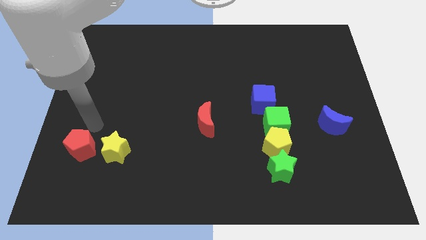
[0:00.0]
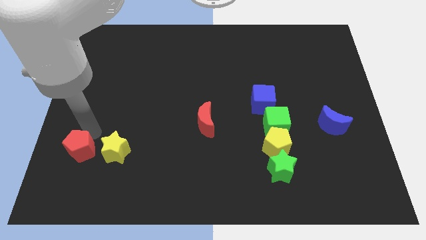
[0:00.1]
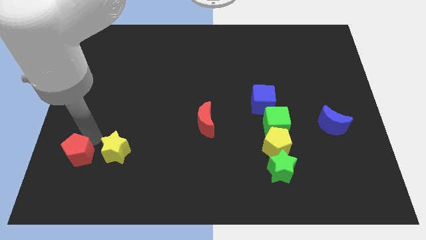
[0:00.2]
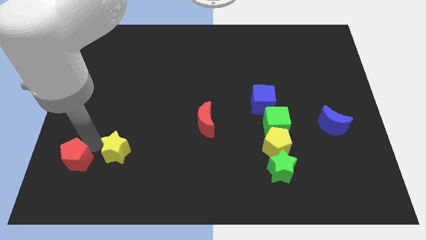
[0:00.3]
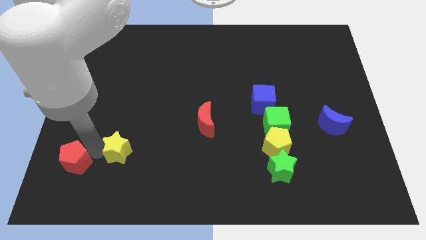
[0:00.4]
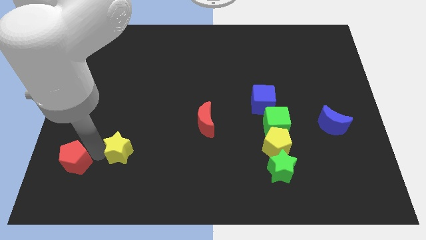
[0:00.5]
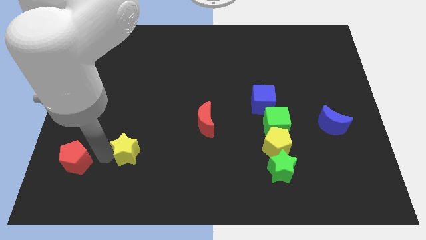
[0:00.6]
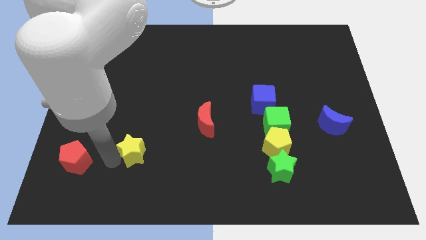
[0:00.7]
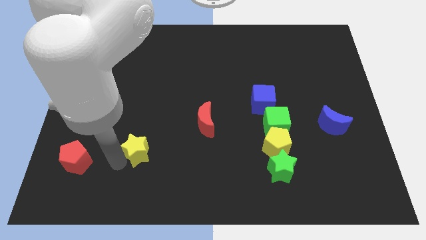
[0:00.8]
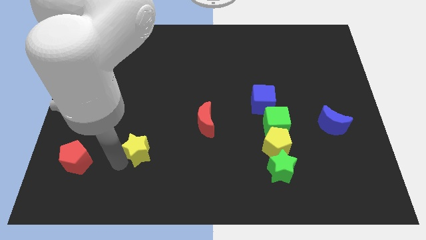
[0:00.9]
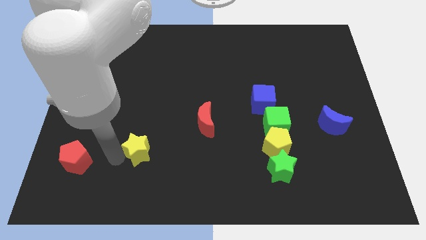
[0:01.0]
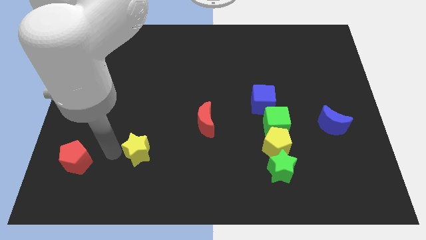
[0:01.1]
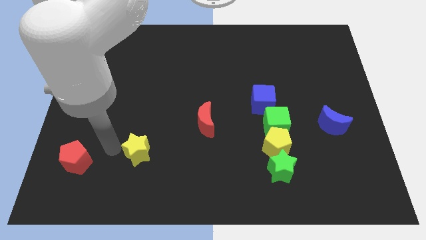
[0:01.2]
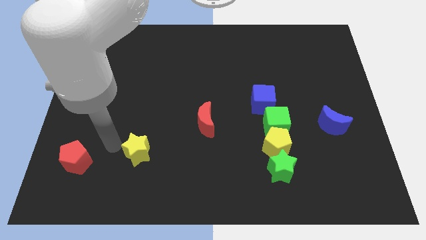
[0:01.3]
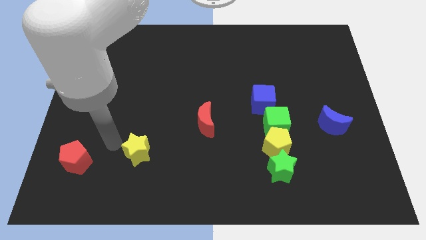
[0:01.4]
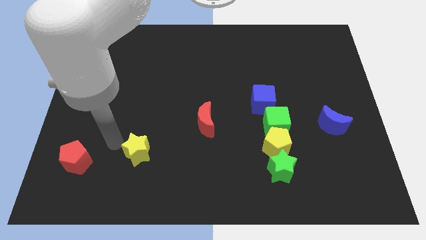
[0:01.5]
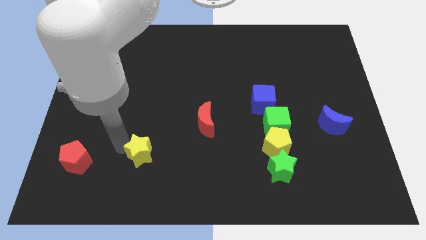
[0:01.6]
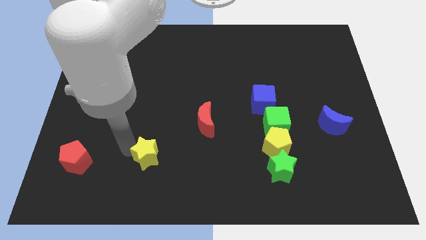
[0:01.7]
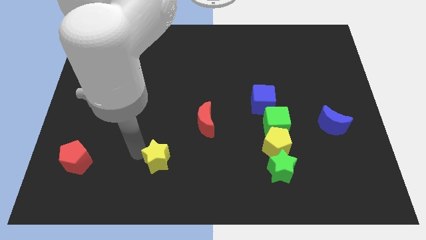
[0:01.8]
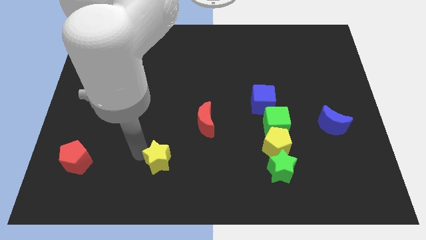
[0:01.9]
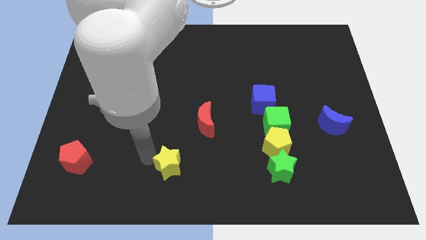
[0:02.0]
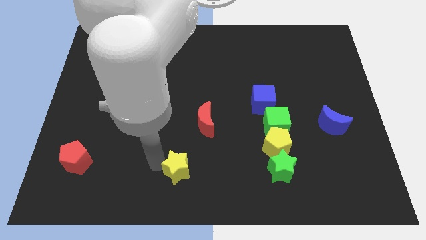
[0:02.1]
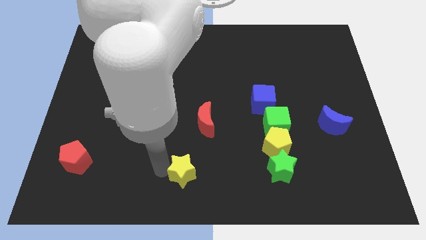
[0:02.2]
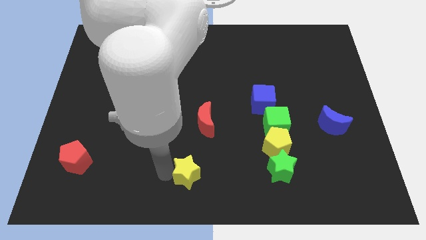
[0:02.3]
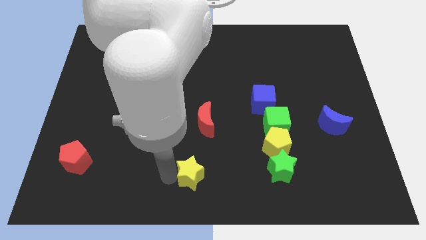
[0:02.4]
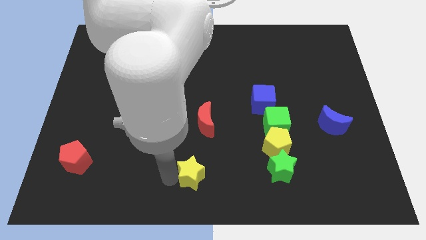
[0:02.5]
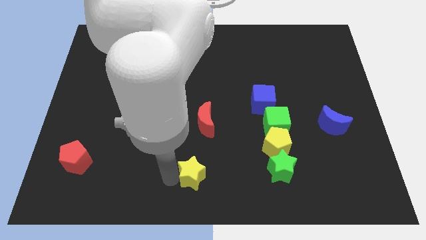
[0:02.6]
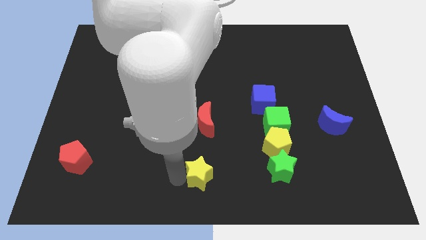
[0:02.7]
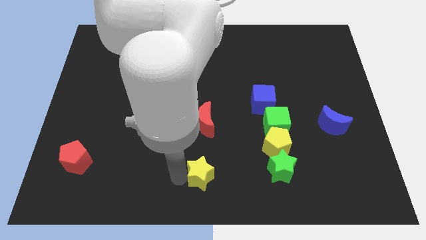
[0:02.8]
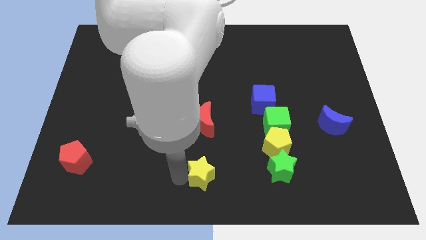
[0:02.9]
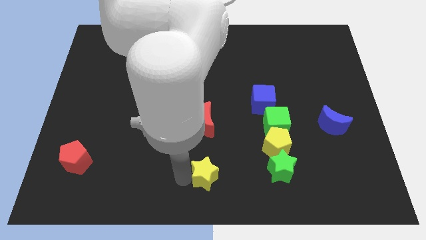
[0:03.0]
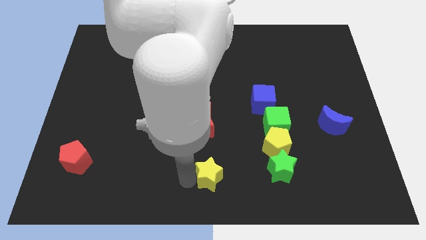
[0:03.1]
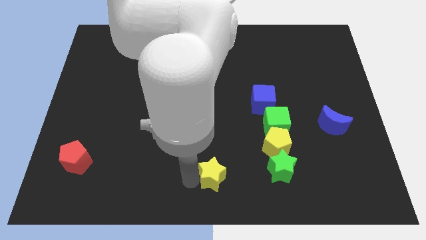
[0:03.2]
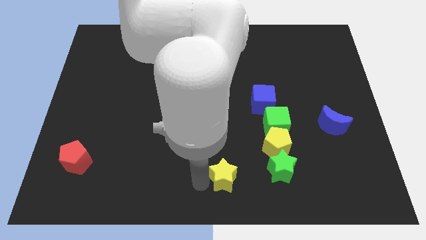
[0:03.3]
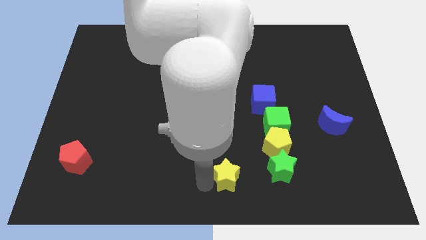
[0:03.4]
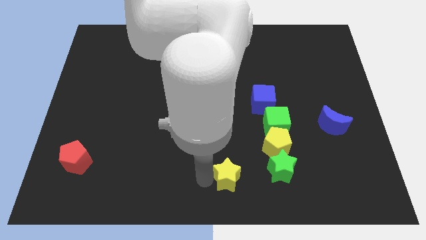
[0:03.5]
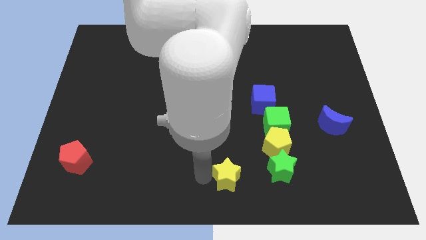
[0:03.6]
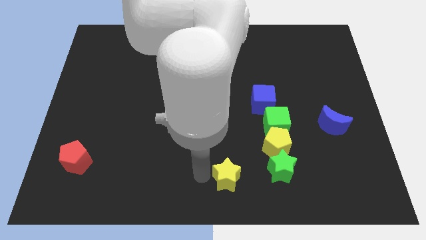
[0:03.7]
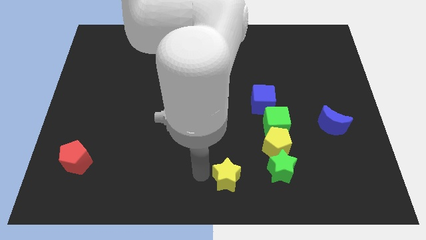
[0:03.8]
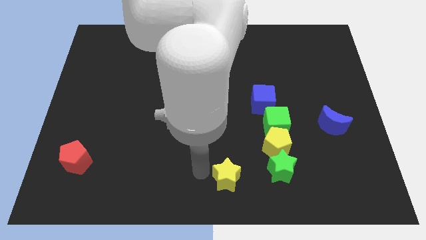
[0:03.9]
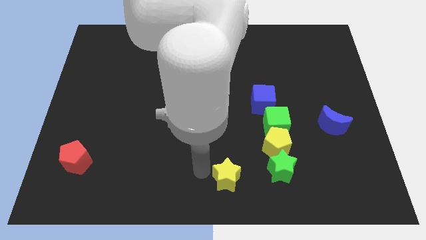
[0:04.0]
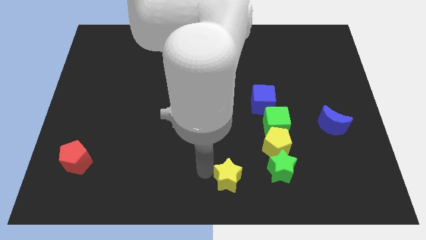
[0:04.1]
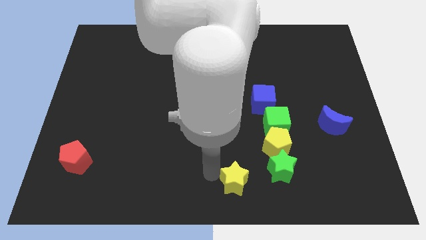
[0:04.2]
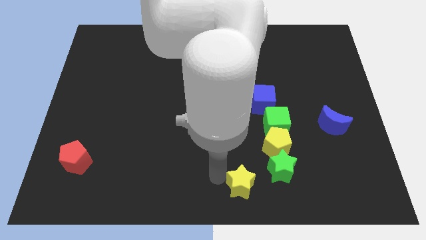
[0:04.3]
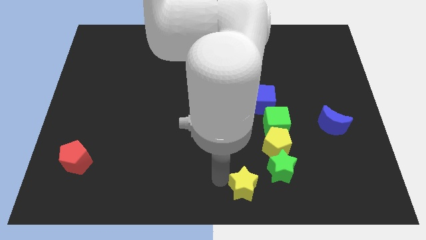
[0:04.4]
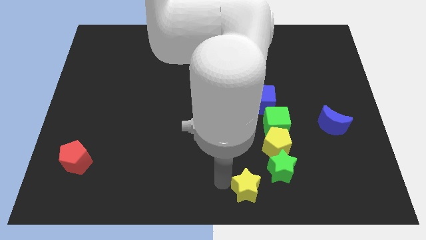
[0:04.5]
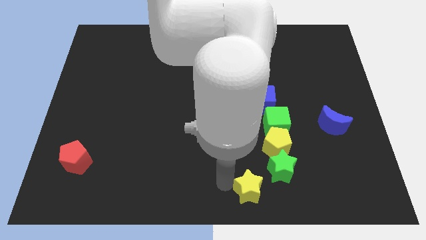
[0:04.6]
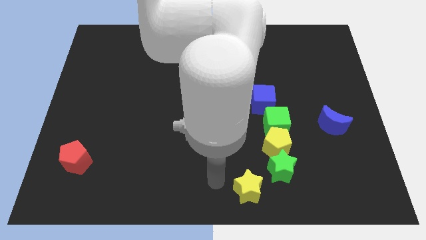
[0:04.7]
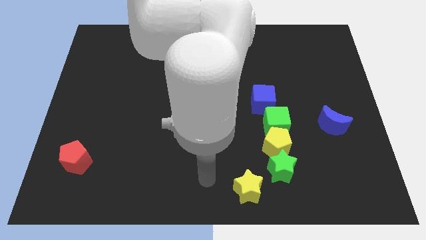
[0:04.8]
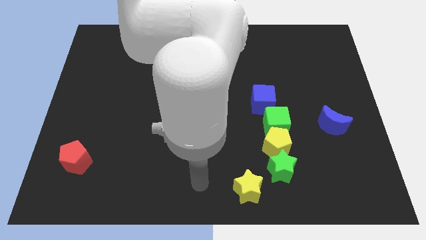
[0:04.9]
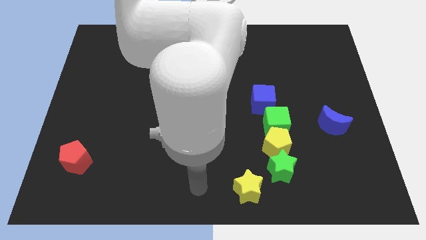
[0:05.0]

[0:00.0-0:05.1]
place yellow star to the bottom left of green star

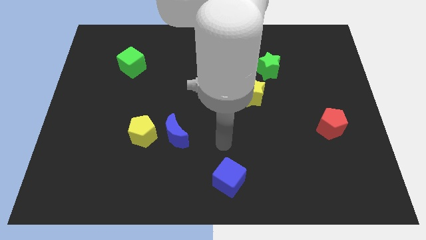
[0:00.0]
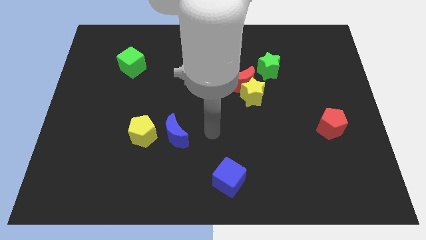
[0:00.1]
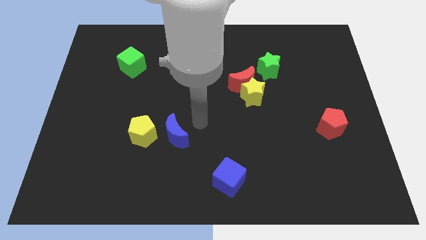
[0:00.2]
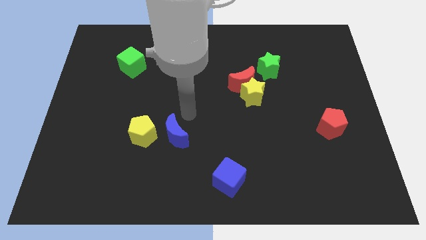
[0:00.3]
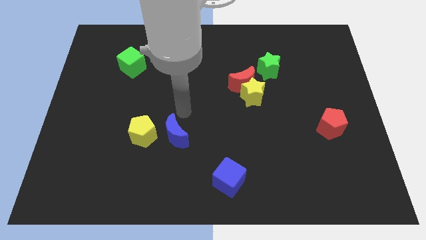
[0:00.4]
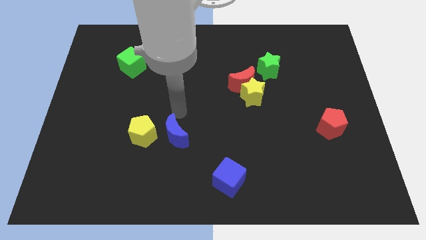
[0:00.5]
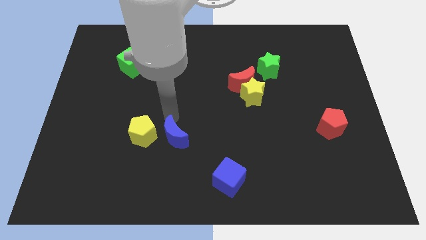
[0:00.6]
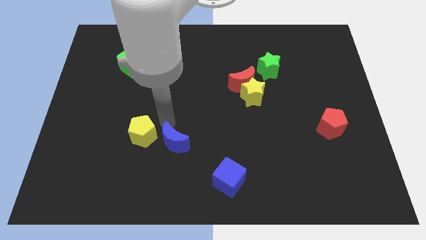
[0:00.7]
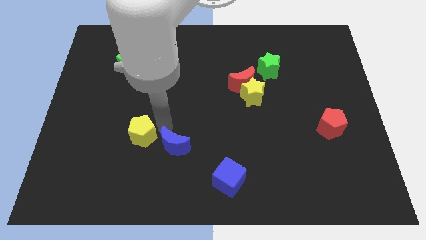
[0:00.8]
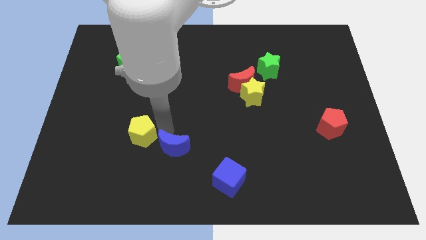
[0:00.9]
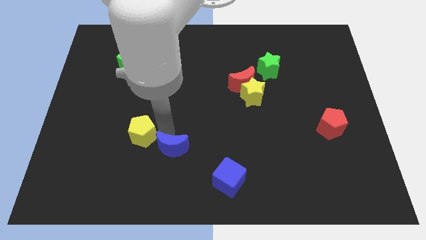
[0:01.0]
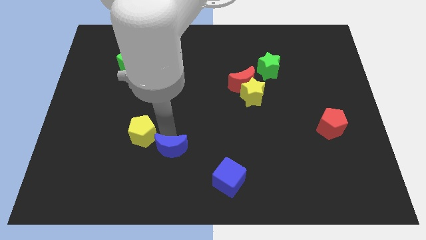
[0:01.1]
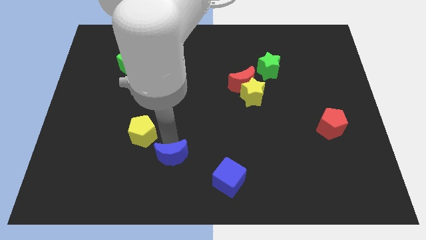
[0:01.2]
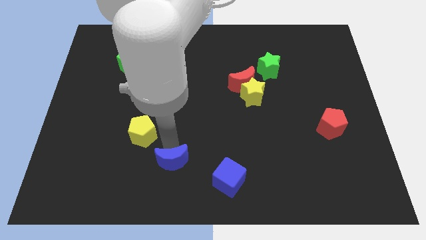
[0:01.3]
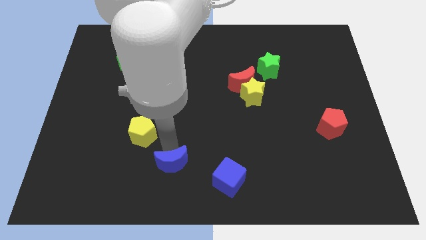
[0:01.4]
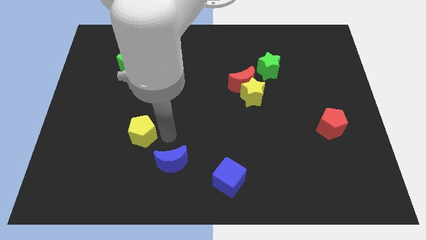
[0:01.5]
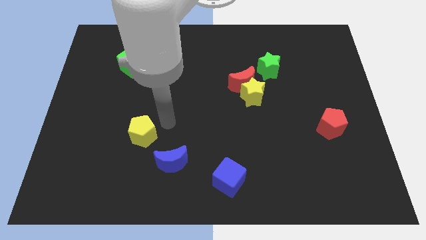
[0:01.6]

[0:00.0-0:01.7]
move the blue moon slightly to the bottom

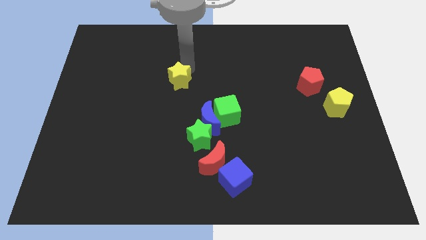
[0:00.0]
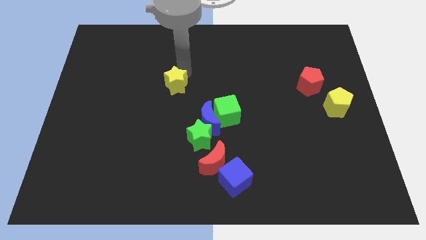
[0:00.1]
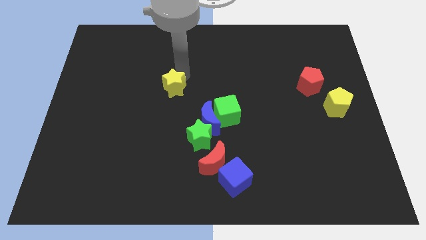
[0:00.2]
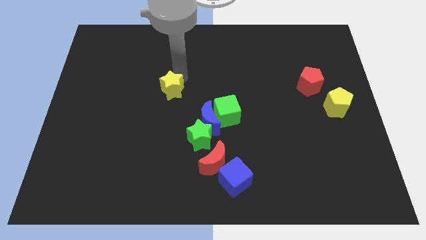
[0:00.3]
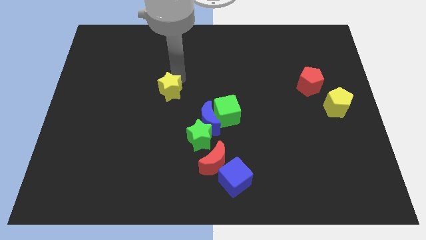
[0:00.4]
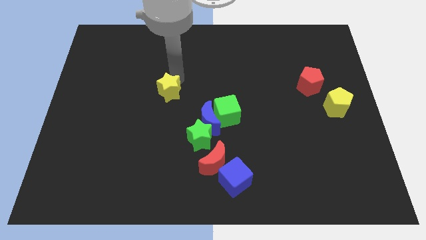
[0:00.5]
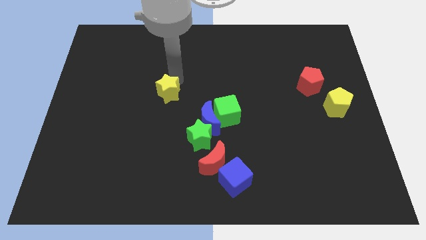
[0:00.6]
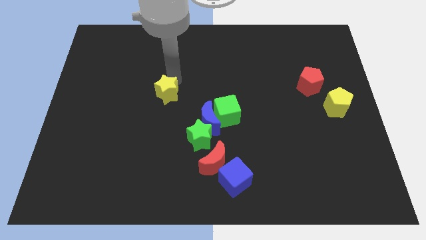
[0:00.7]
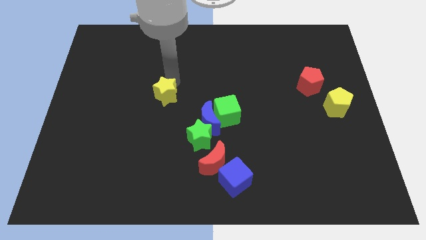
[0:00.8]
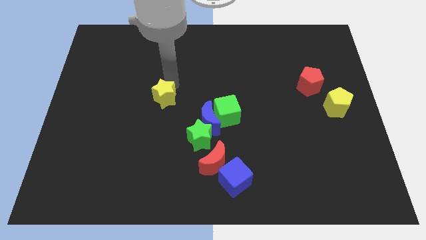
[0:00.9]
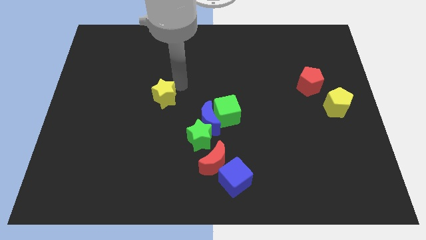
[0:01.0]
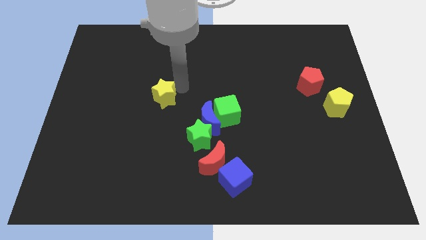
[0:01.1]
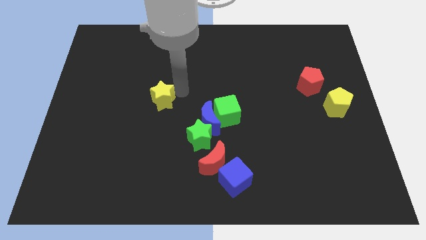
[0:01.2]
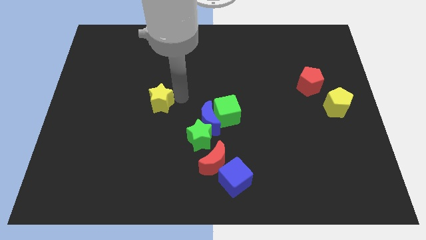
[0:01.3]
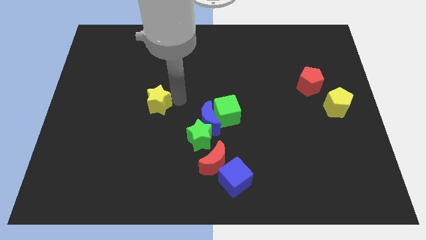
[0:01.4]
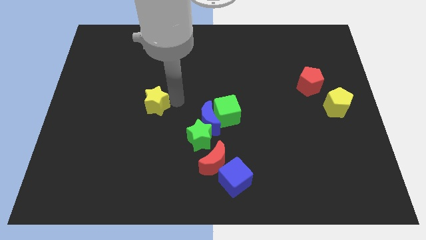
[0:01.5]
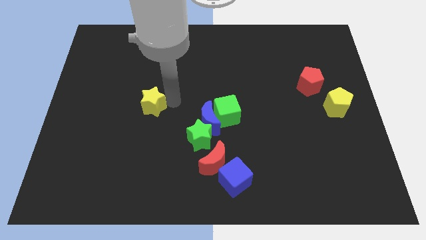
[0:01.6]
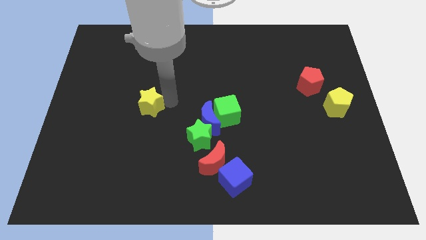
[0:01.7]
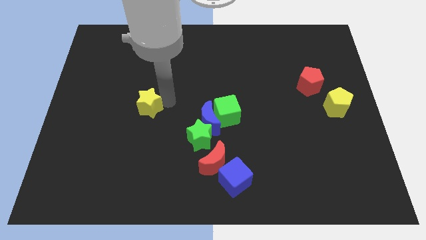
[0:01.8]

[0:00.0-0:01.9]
push yellow star towards bottom

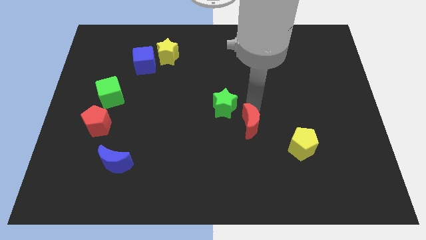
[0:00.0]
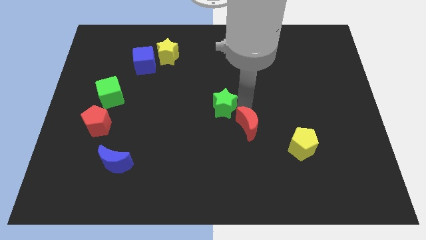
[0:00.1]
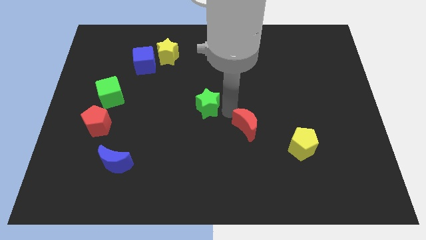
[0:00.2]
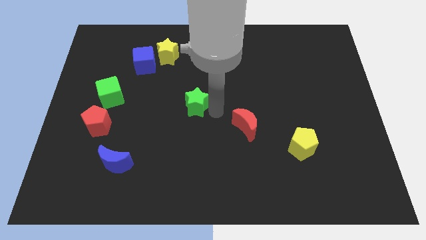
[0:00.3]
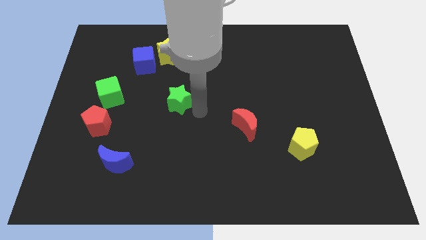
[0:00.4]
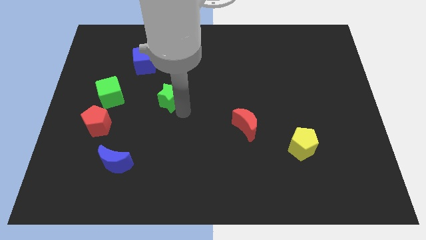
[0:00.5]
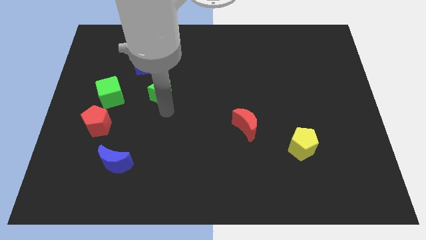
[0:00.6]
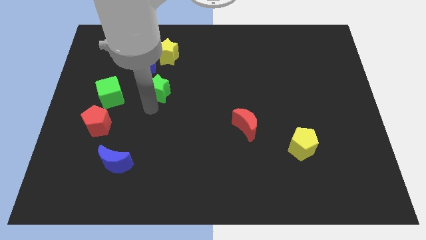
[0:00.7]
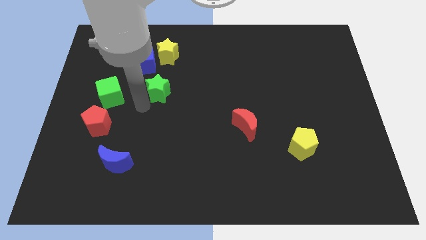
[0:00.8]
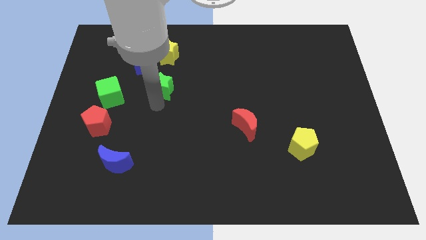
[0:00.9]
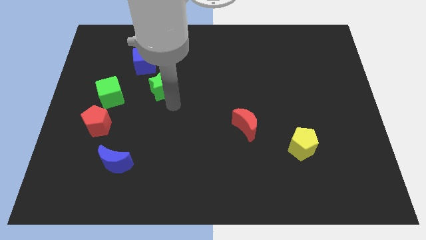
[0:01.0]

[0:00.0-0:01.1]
separate the green star from the red moon
